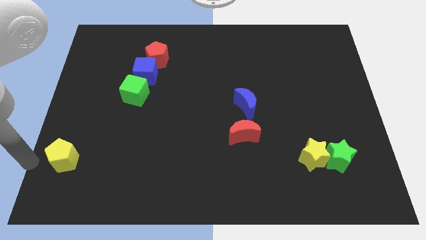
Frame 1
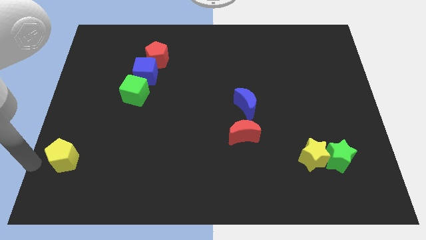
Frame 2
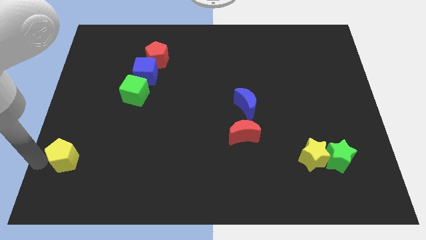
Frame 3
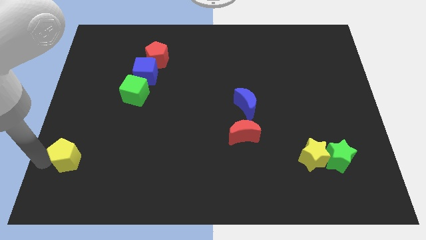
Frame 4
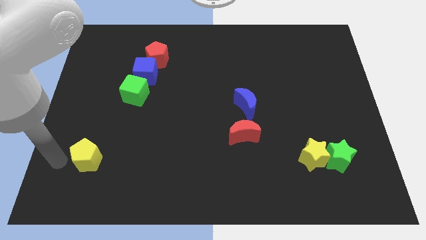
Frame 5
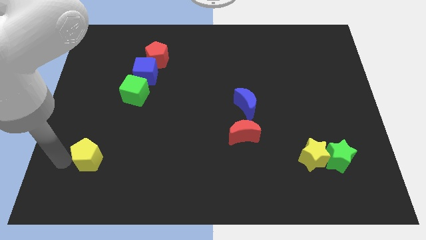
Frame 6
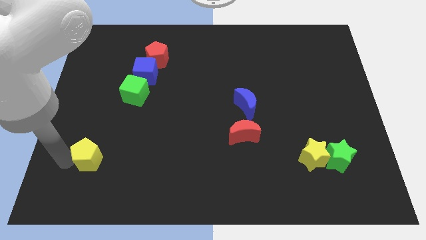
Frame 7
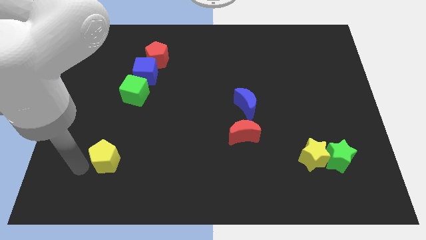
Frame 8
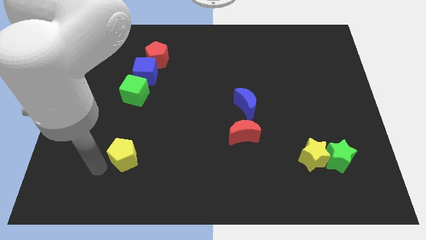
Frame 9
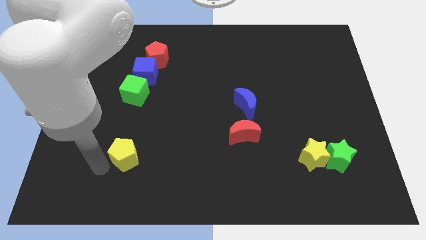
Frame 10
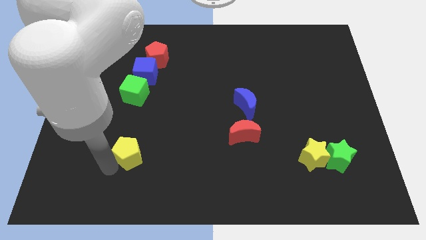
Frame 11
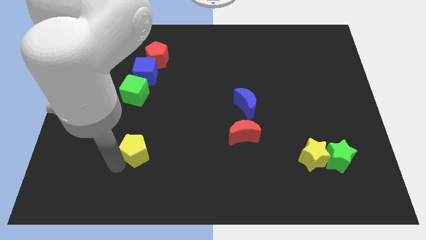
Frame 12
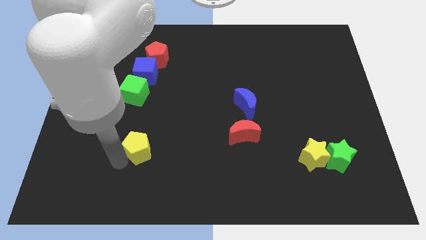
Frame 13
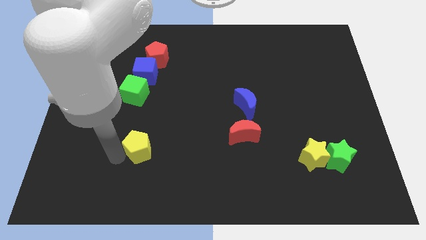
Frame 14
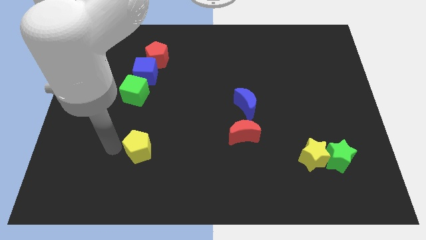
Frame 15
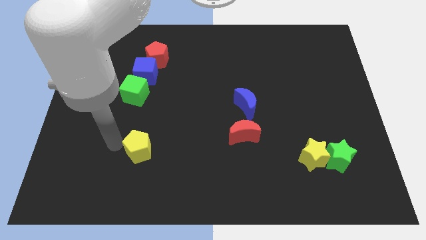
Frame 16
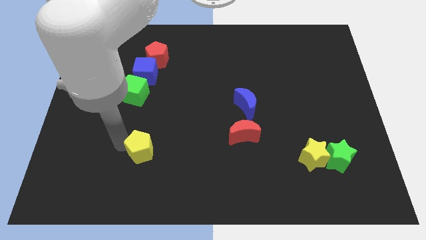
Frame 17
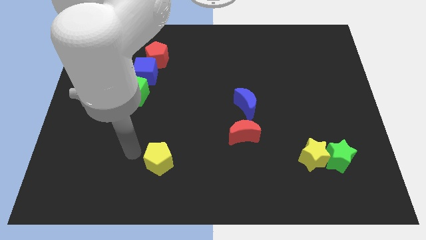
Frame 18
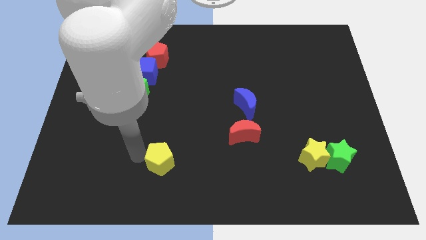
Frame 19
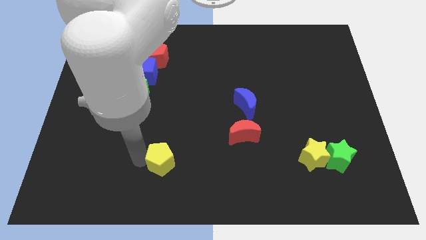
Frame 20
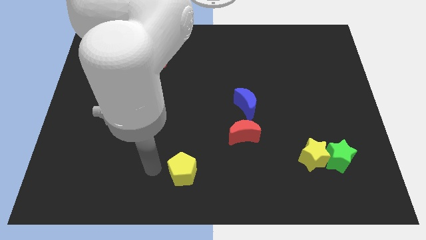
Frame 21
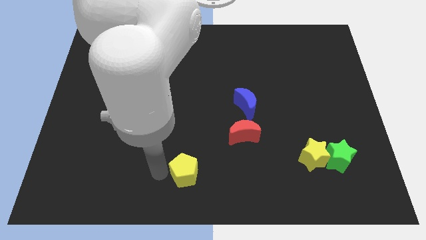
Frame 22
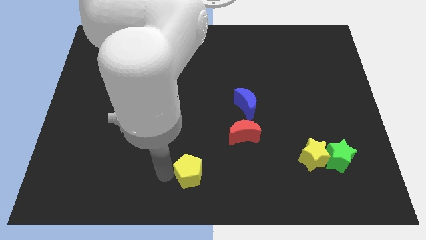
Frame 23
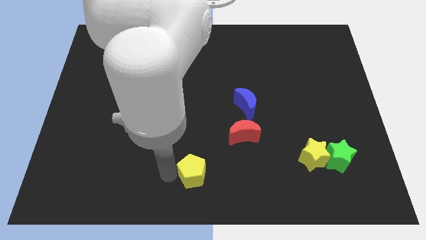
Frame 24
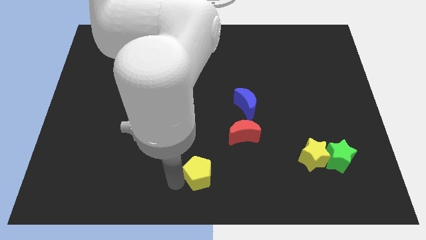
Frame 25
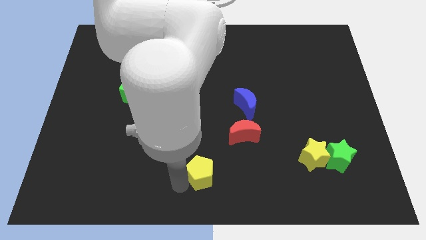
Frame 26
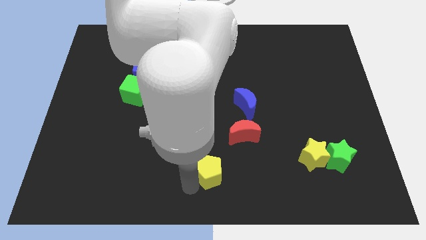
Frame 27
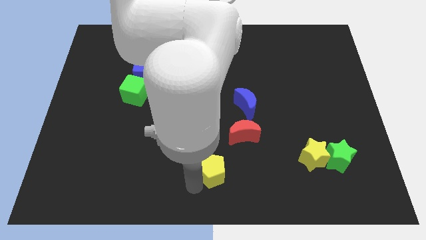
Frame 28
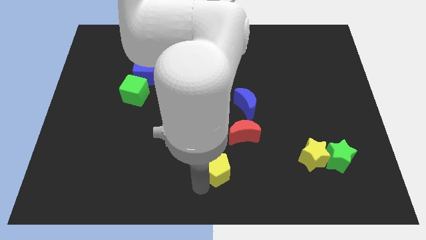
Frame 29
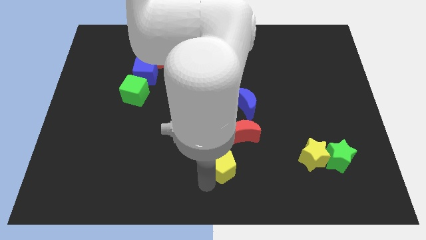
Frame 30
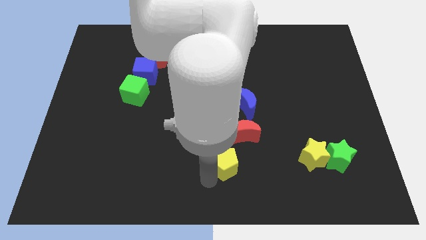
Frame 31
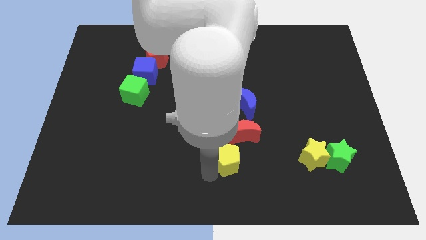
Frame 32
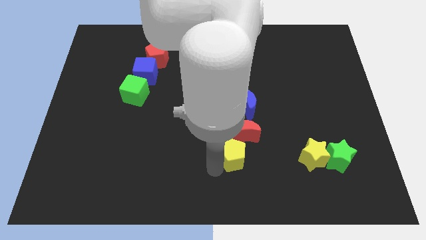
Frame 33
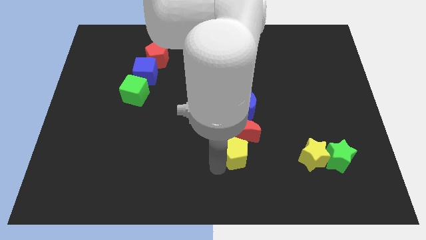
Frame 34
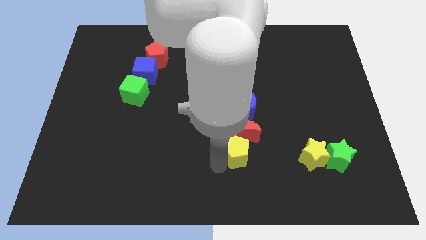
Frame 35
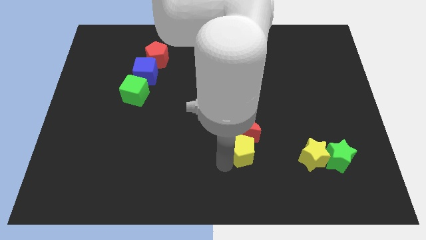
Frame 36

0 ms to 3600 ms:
put yellow pentagon below red moon

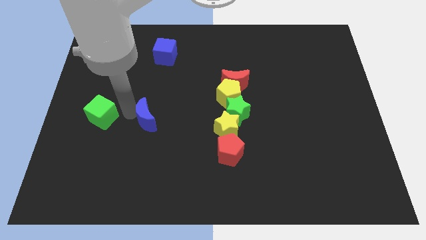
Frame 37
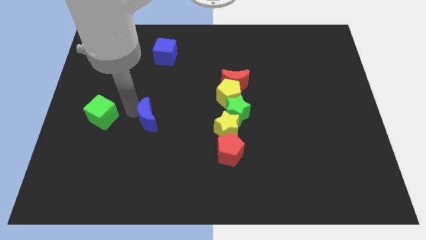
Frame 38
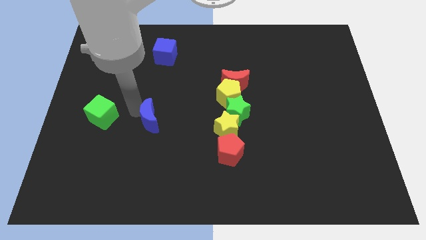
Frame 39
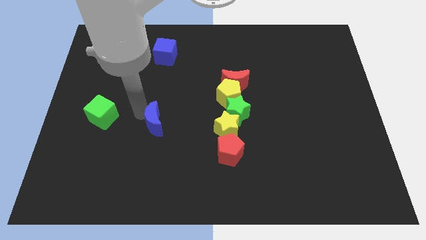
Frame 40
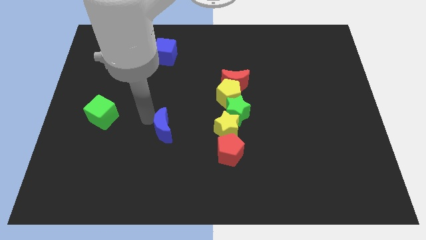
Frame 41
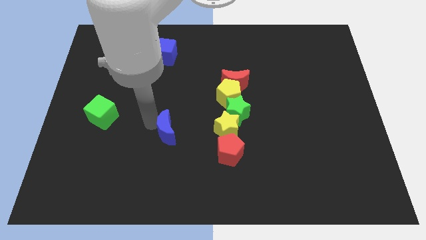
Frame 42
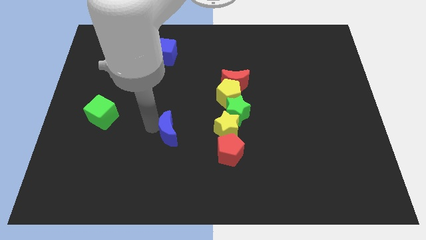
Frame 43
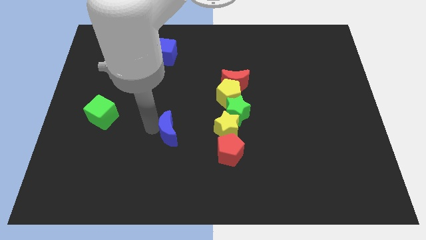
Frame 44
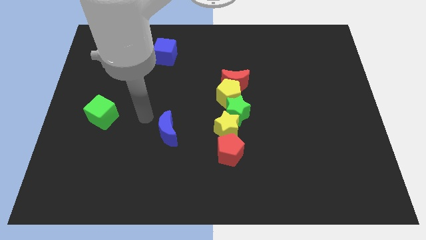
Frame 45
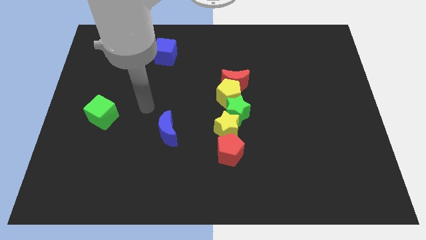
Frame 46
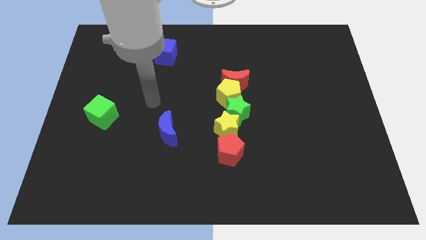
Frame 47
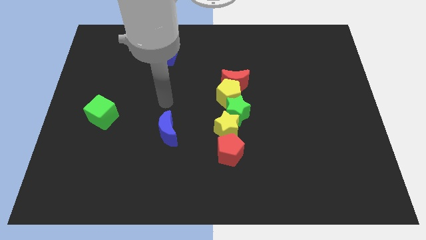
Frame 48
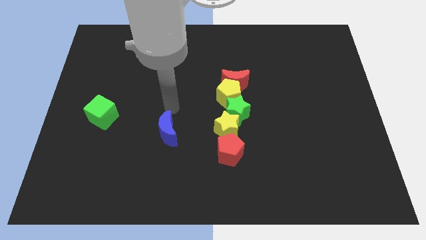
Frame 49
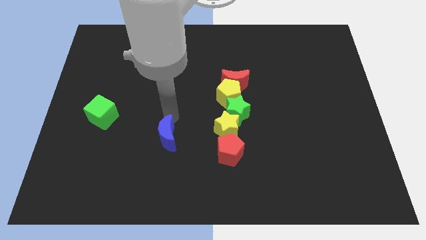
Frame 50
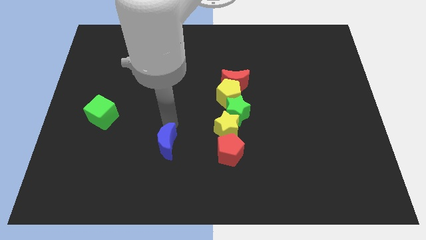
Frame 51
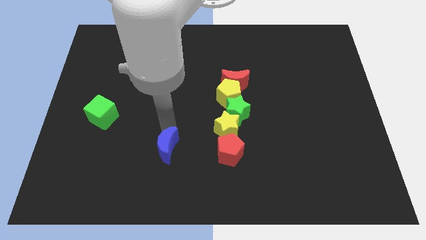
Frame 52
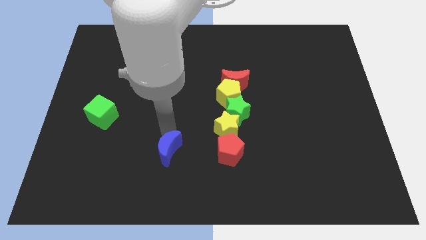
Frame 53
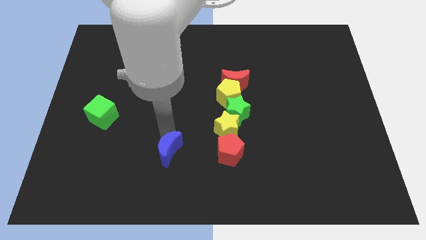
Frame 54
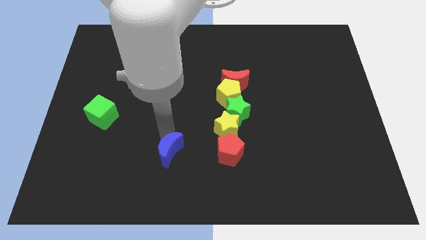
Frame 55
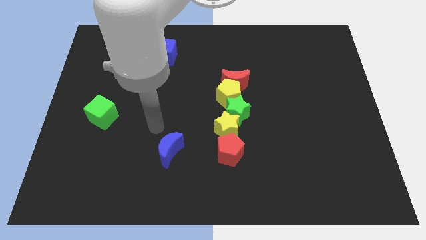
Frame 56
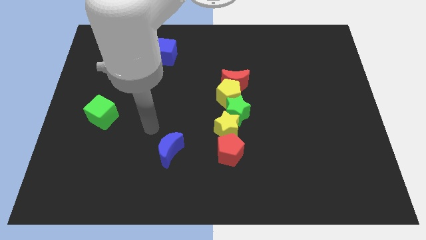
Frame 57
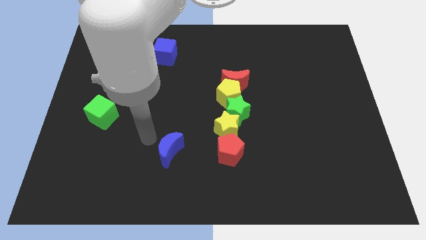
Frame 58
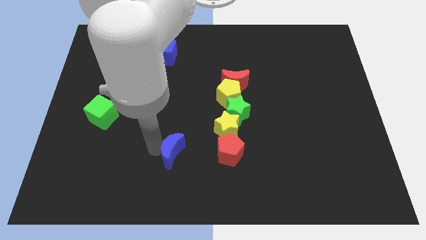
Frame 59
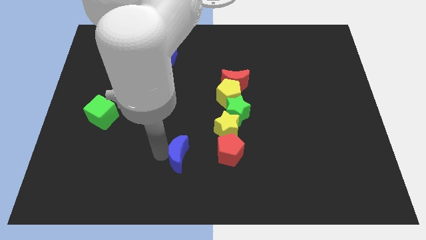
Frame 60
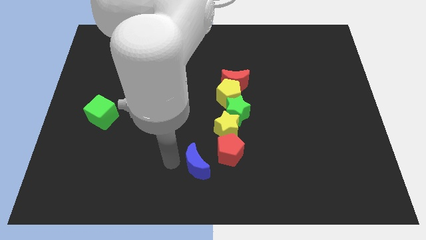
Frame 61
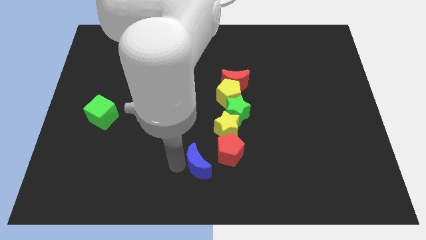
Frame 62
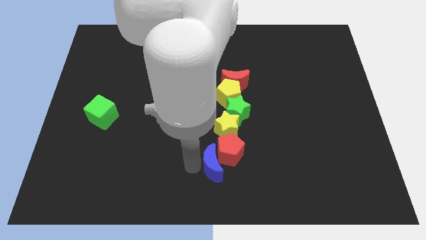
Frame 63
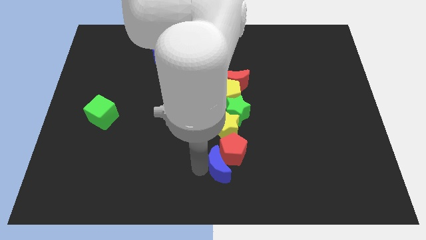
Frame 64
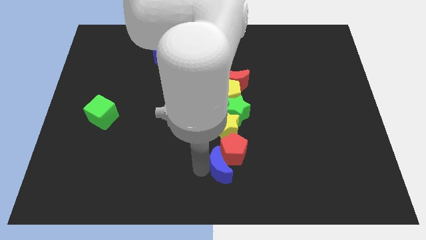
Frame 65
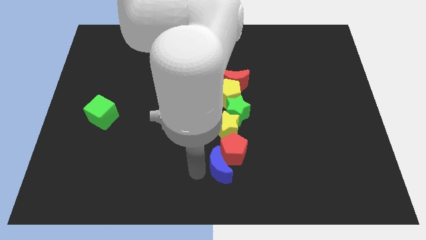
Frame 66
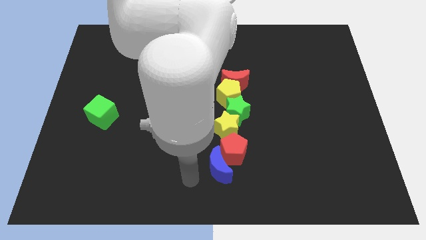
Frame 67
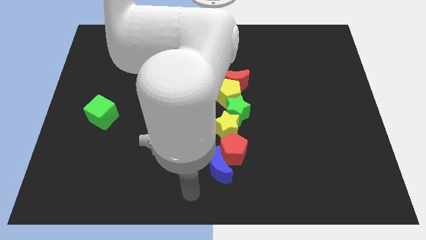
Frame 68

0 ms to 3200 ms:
move the blue moon into the red pentagon

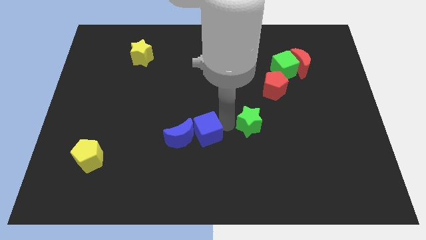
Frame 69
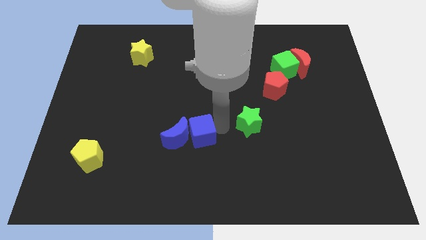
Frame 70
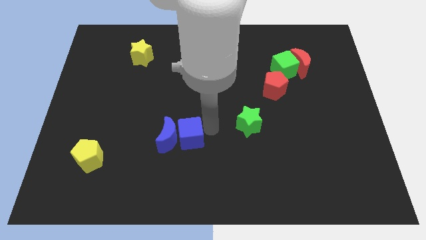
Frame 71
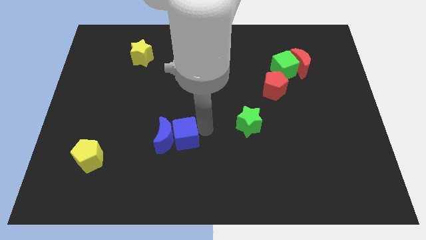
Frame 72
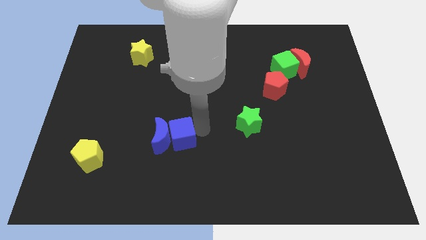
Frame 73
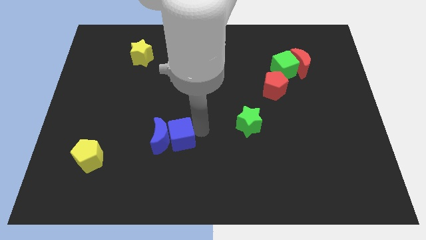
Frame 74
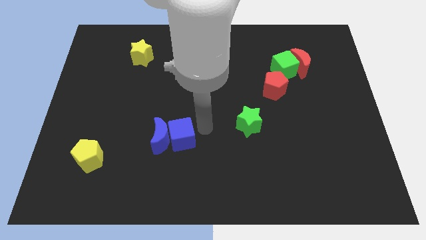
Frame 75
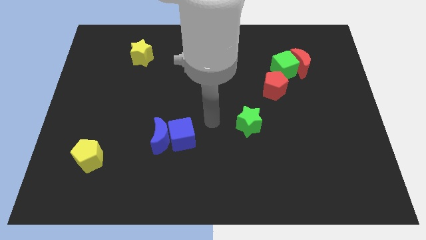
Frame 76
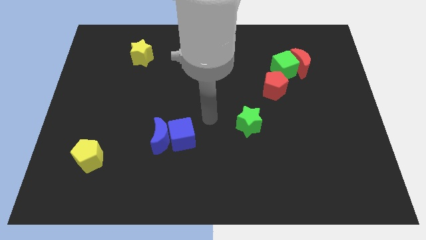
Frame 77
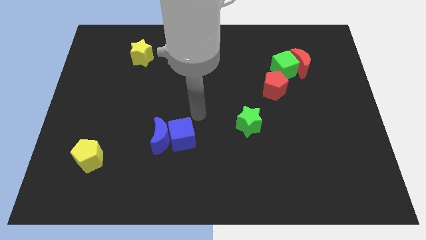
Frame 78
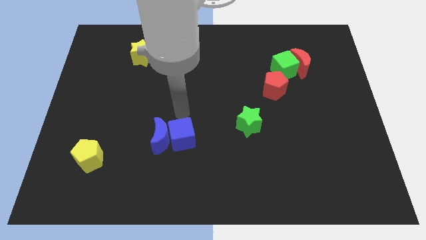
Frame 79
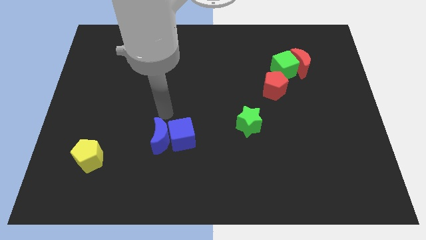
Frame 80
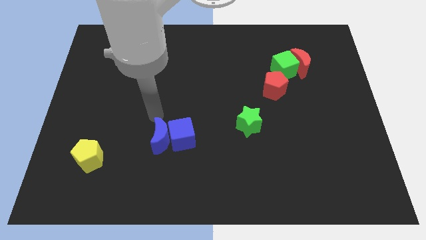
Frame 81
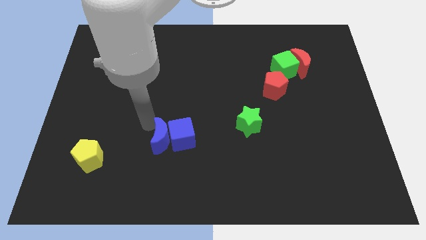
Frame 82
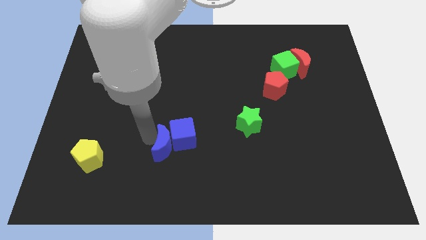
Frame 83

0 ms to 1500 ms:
push the blue crescent with the blue cube towards the bottom left of the board

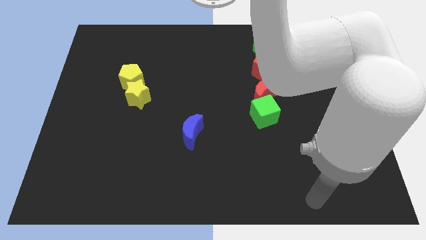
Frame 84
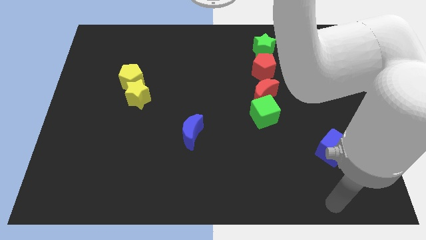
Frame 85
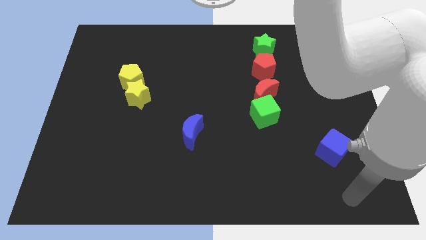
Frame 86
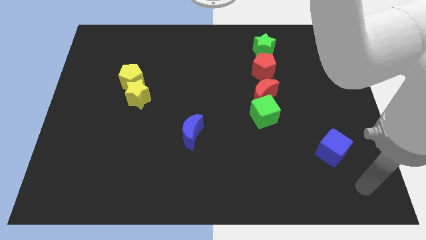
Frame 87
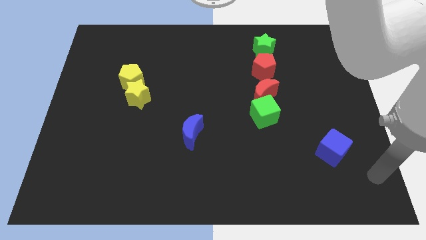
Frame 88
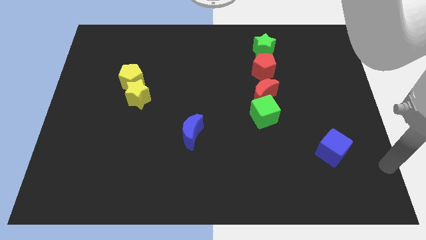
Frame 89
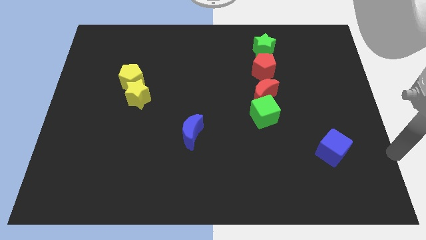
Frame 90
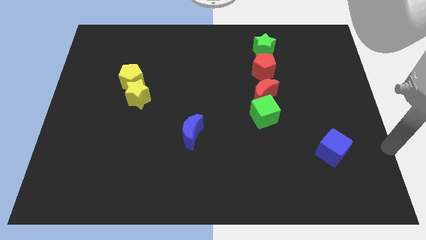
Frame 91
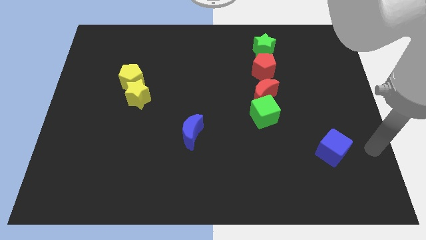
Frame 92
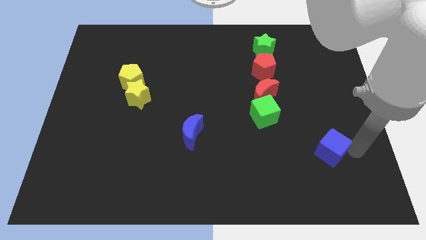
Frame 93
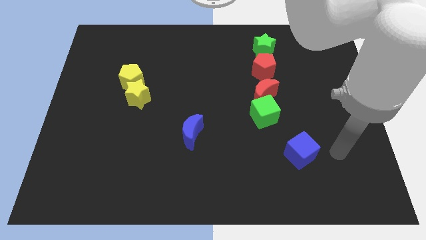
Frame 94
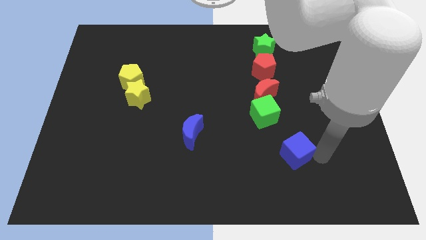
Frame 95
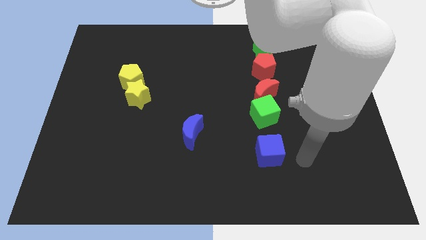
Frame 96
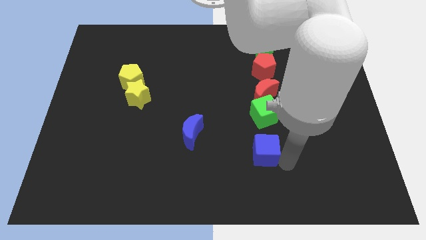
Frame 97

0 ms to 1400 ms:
move the blue cube vertically below the green cube
